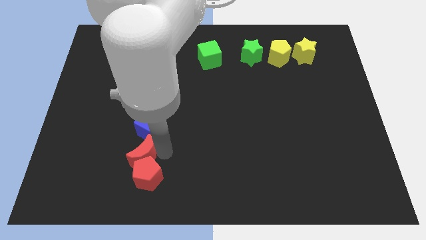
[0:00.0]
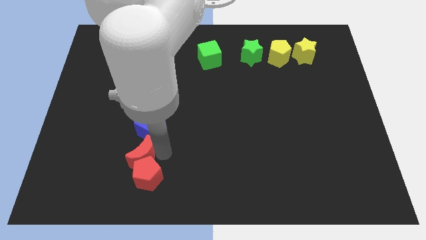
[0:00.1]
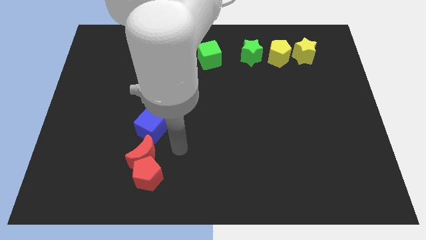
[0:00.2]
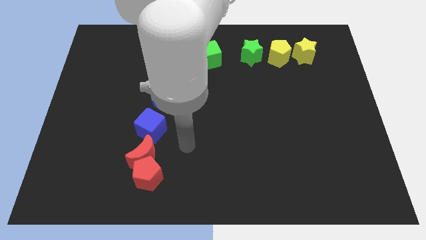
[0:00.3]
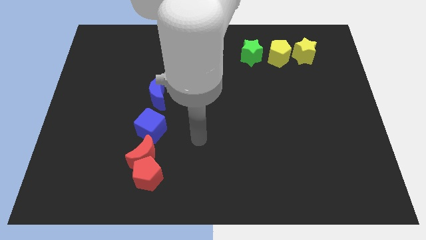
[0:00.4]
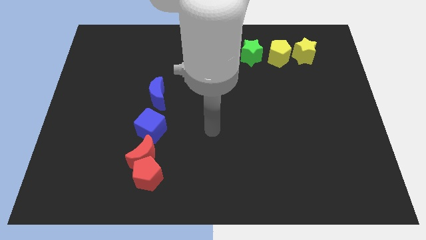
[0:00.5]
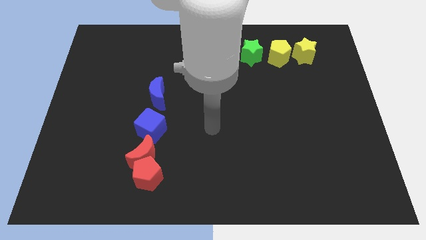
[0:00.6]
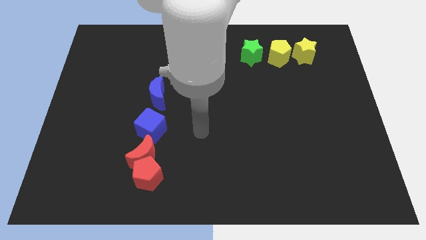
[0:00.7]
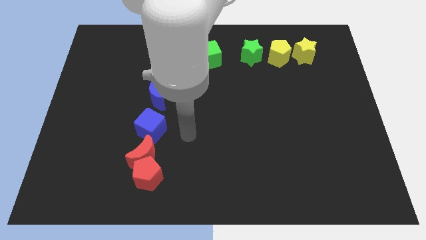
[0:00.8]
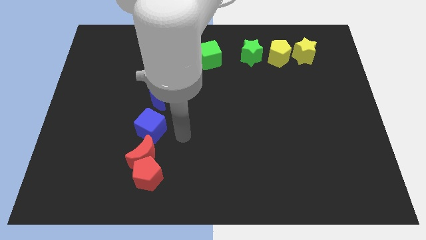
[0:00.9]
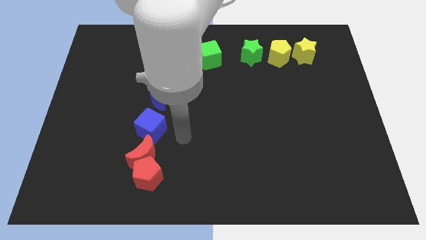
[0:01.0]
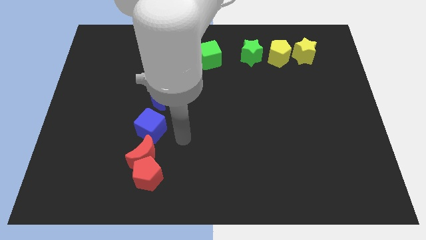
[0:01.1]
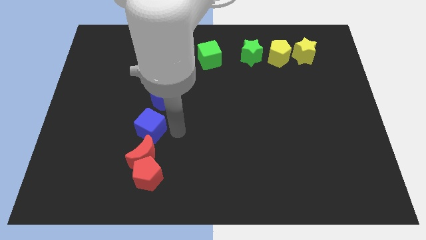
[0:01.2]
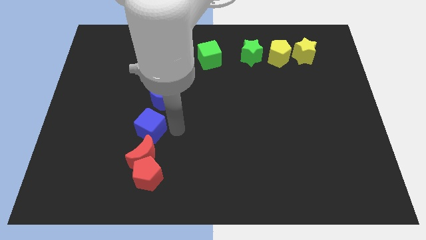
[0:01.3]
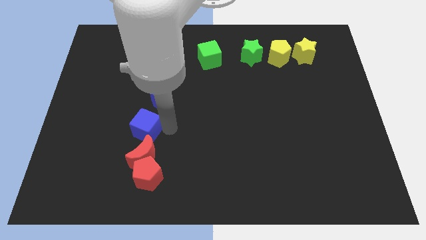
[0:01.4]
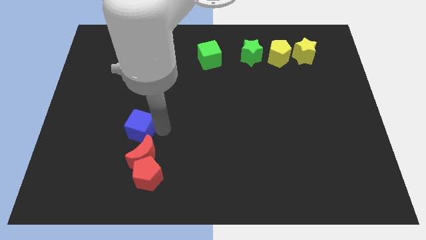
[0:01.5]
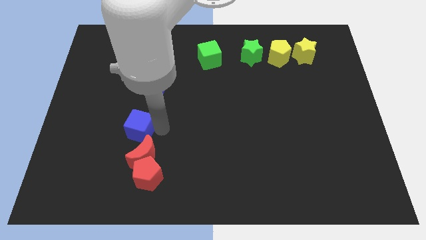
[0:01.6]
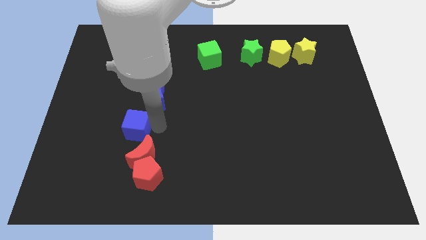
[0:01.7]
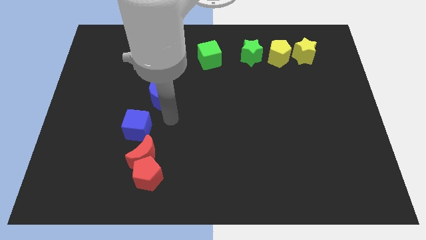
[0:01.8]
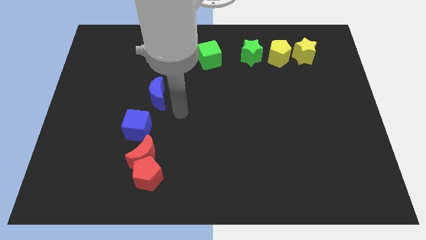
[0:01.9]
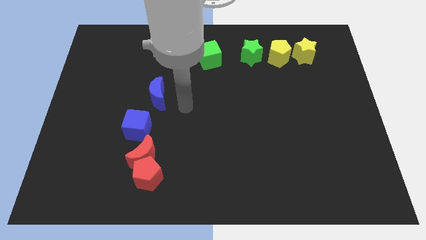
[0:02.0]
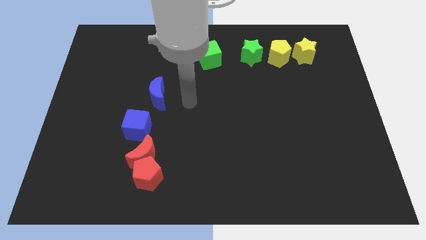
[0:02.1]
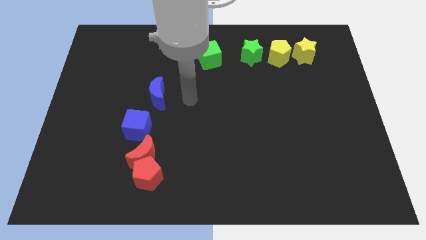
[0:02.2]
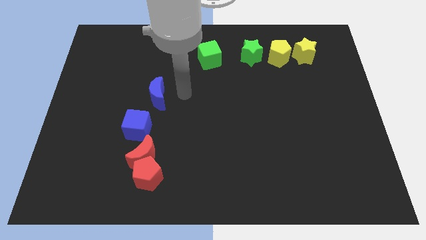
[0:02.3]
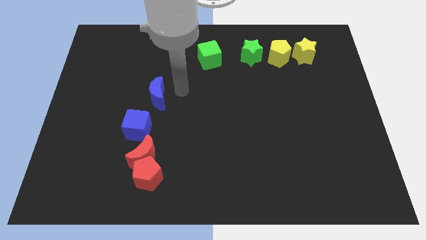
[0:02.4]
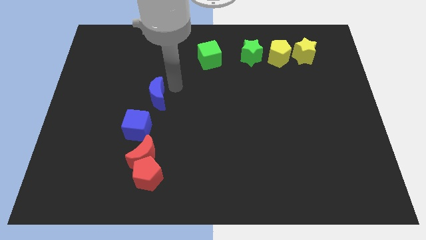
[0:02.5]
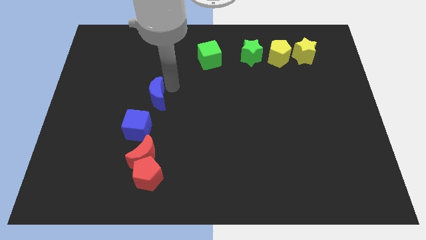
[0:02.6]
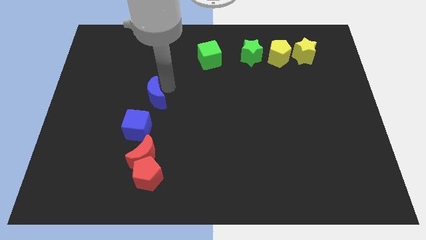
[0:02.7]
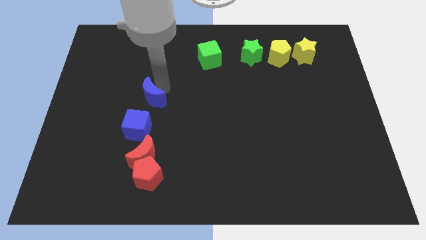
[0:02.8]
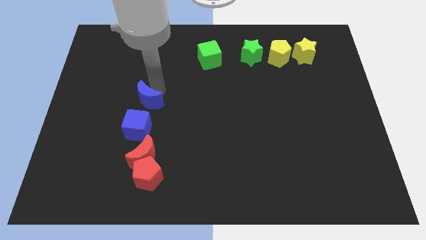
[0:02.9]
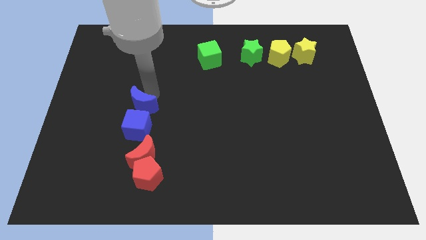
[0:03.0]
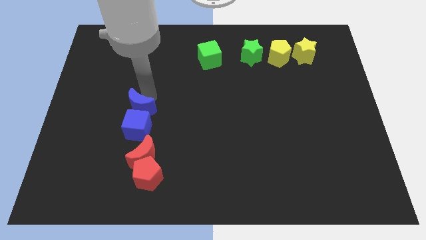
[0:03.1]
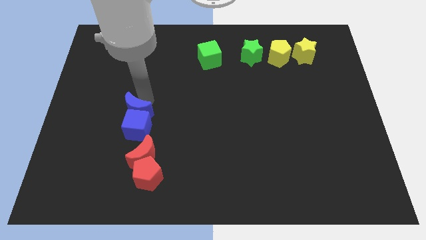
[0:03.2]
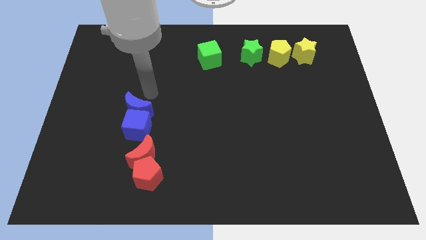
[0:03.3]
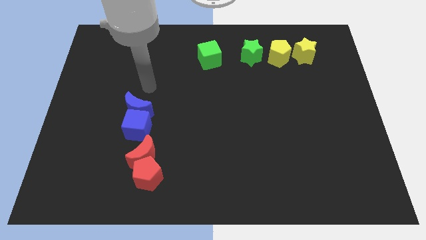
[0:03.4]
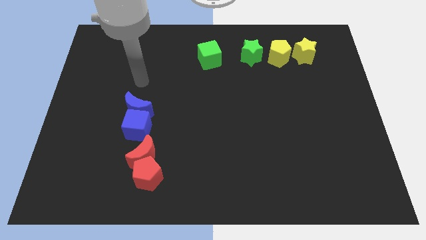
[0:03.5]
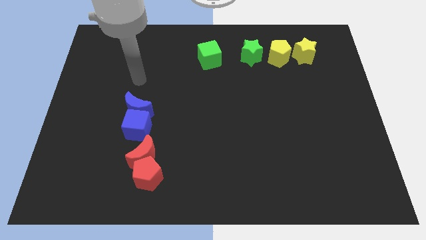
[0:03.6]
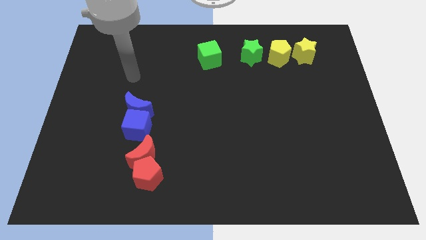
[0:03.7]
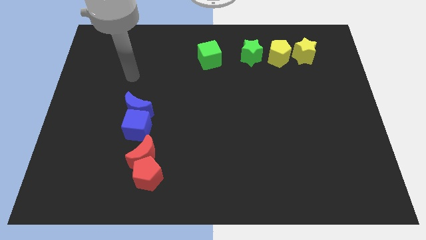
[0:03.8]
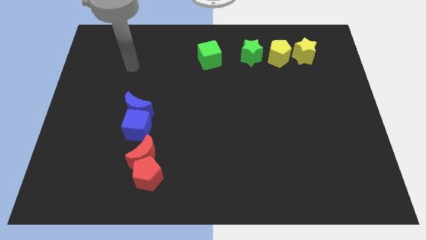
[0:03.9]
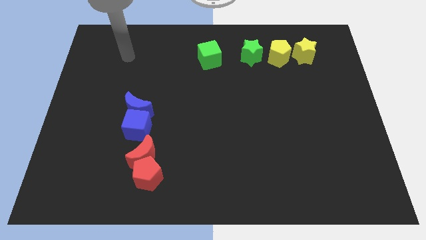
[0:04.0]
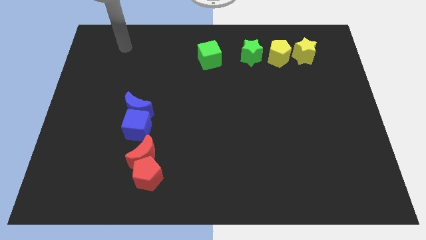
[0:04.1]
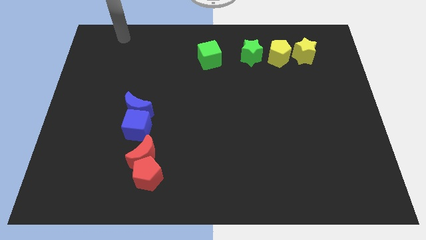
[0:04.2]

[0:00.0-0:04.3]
adjust the blue moon above the blue cube

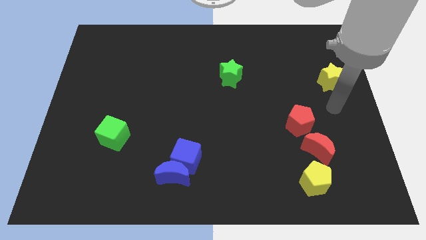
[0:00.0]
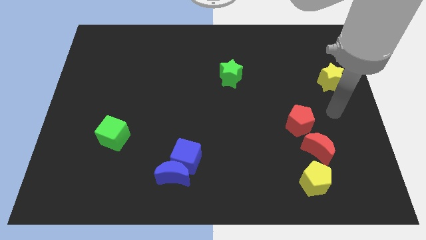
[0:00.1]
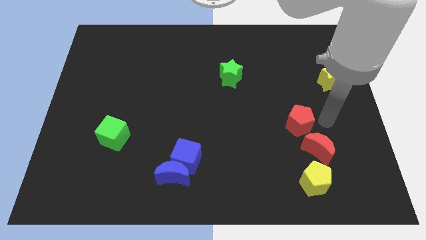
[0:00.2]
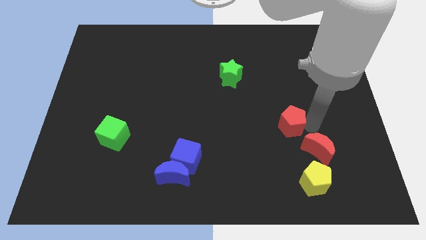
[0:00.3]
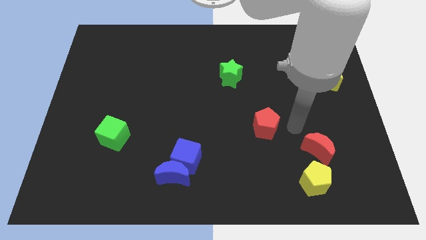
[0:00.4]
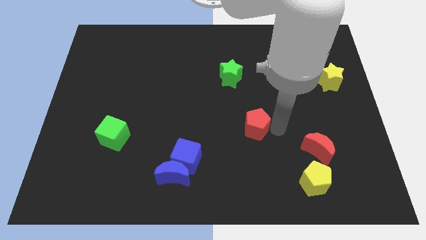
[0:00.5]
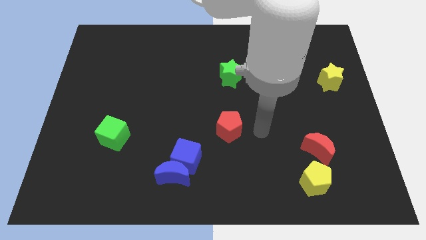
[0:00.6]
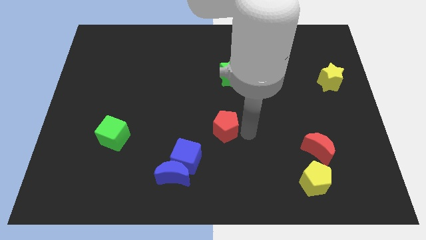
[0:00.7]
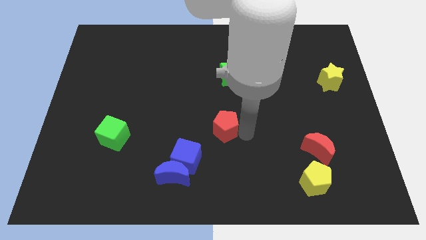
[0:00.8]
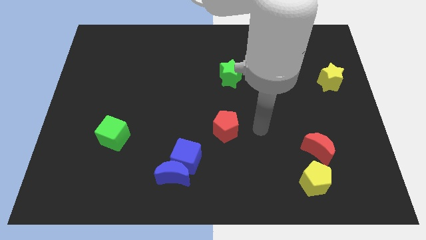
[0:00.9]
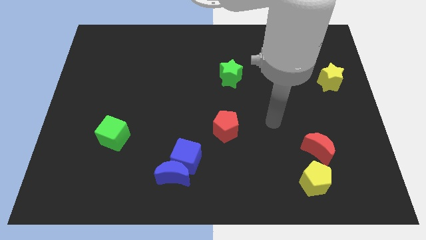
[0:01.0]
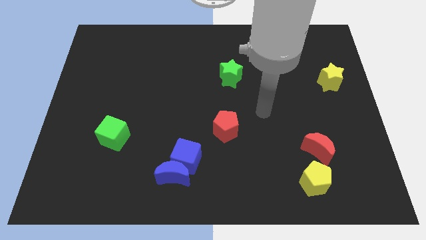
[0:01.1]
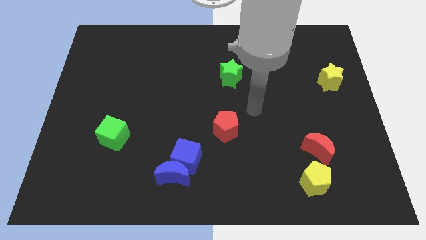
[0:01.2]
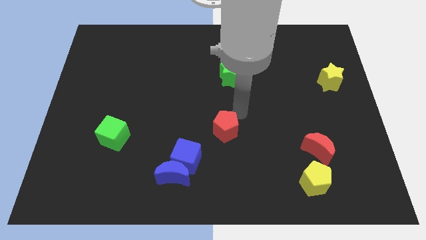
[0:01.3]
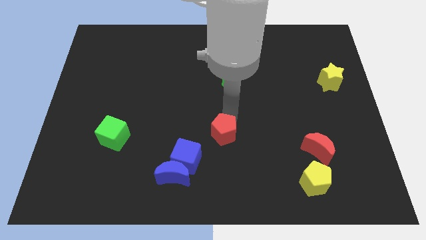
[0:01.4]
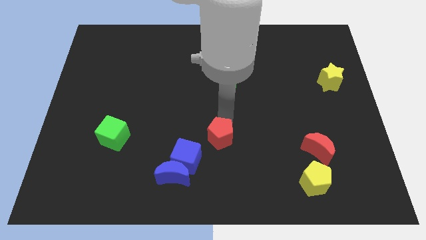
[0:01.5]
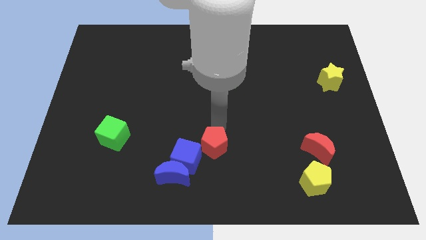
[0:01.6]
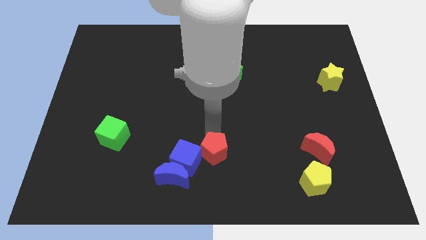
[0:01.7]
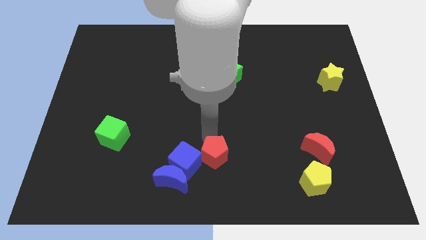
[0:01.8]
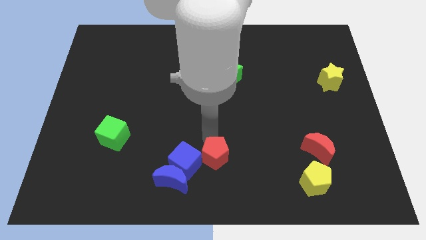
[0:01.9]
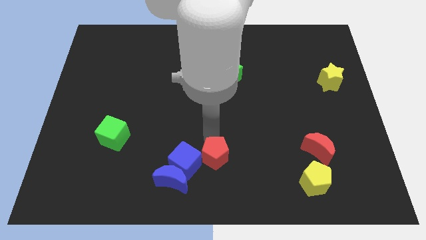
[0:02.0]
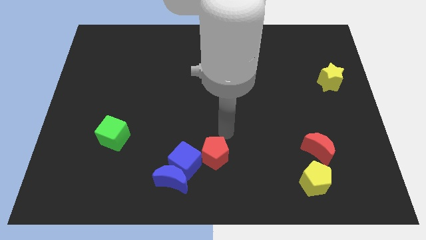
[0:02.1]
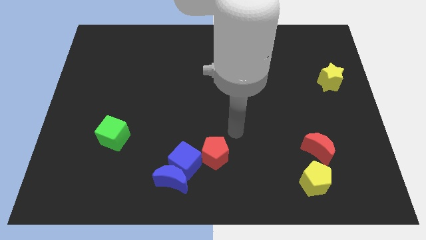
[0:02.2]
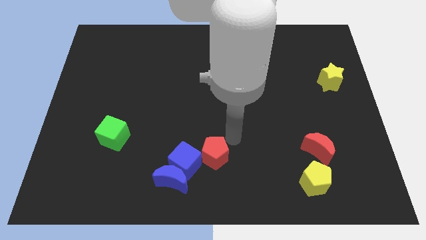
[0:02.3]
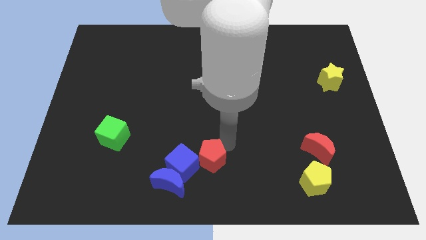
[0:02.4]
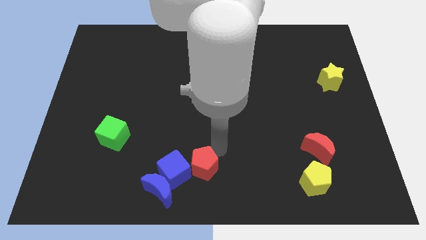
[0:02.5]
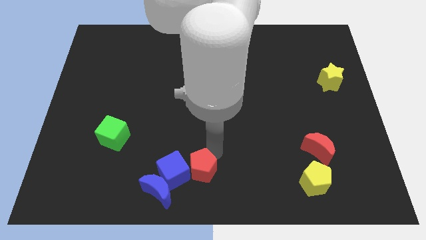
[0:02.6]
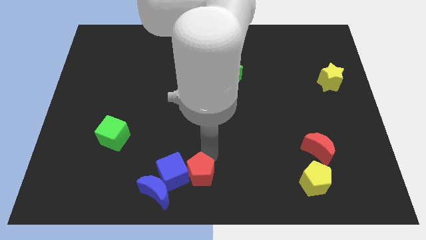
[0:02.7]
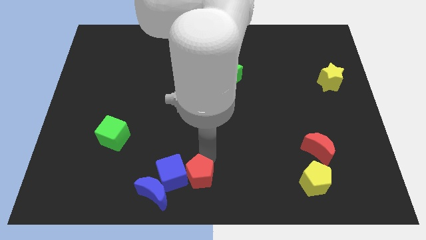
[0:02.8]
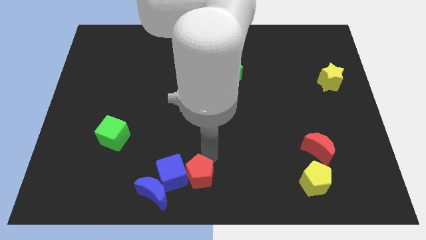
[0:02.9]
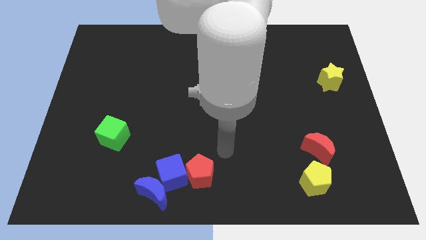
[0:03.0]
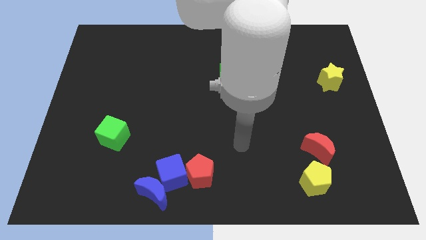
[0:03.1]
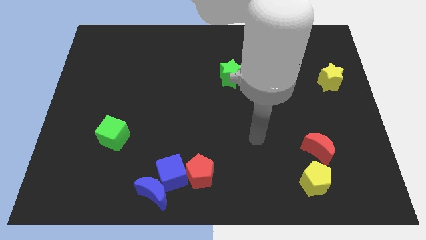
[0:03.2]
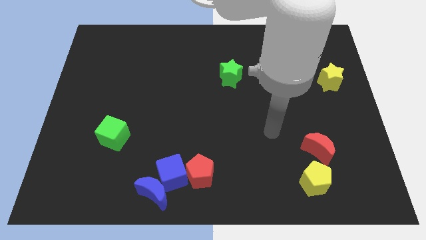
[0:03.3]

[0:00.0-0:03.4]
touch blue cube with red pentagon

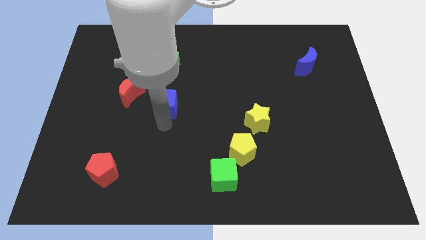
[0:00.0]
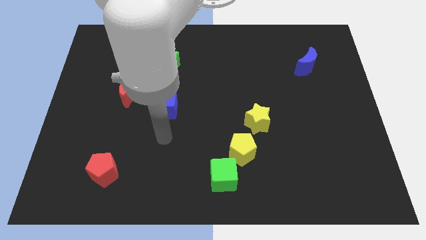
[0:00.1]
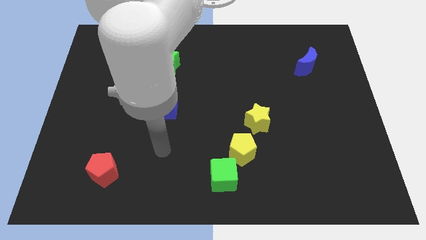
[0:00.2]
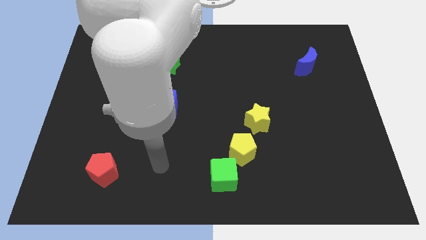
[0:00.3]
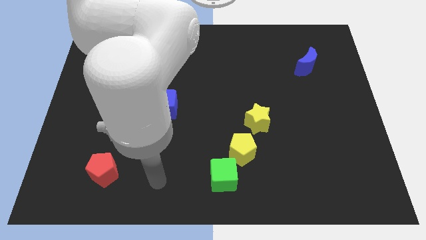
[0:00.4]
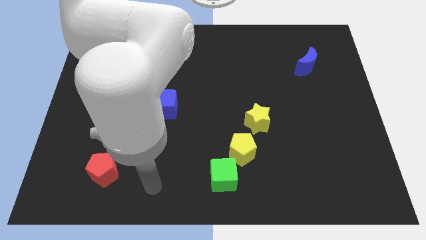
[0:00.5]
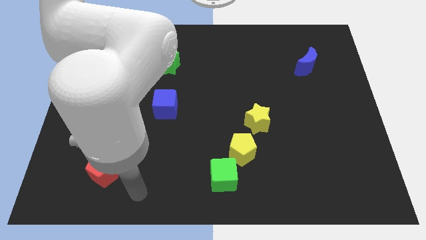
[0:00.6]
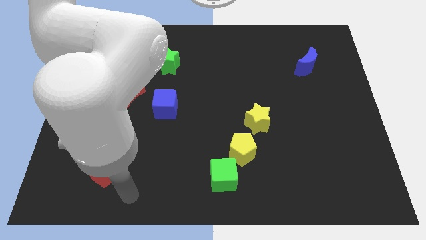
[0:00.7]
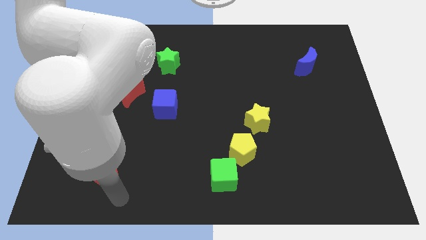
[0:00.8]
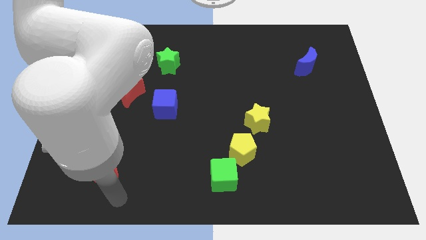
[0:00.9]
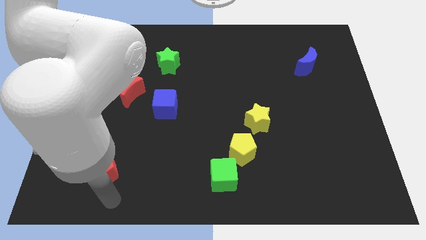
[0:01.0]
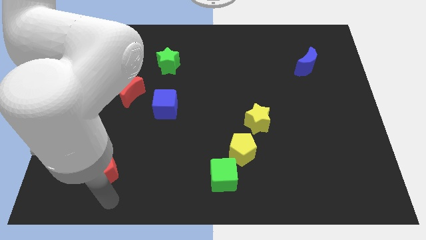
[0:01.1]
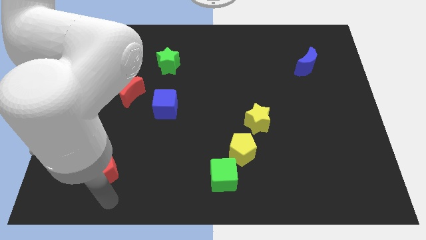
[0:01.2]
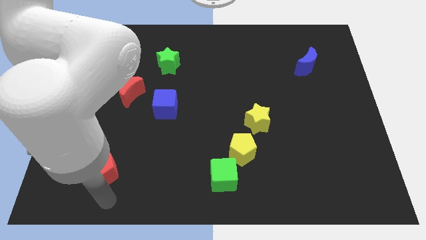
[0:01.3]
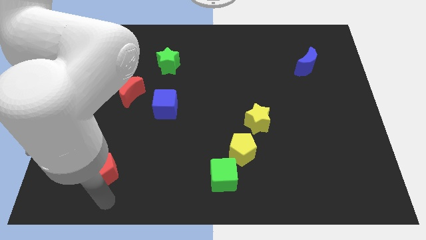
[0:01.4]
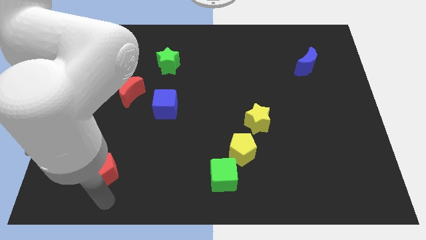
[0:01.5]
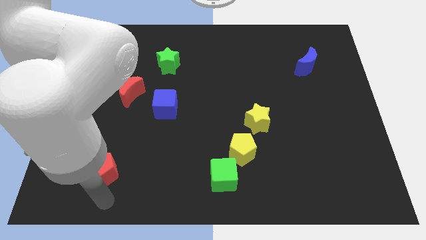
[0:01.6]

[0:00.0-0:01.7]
move the arm away from the blue cube
